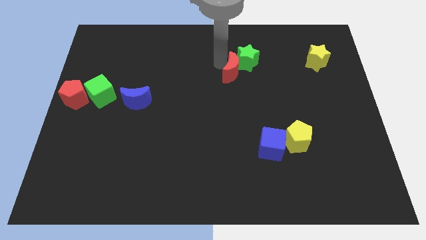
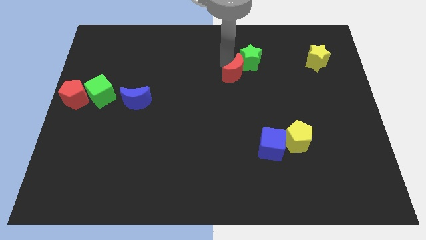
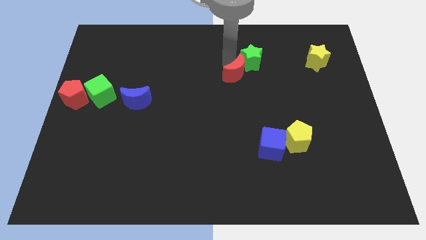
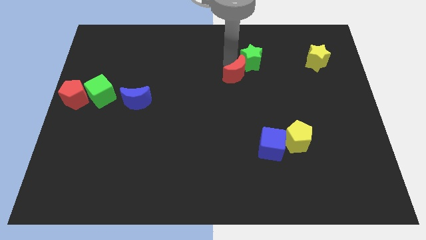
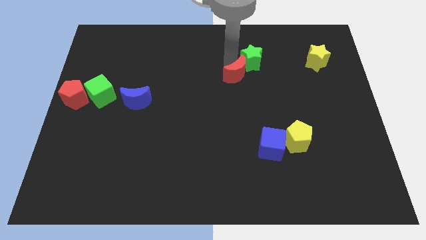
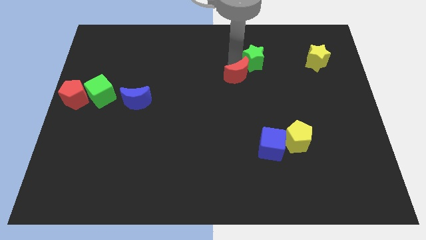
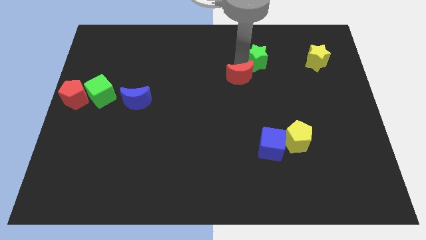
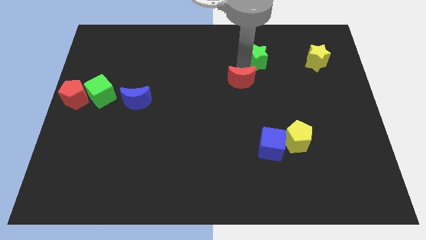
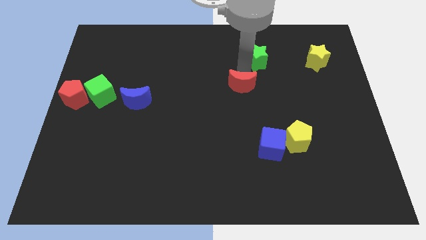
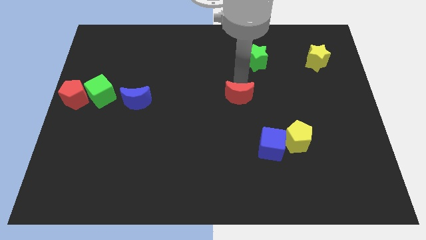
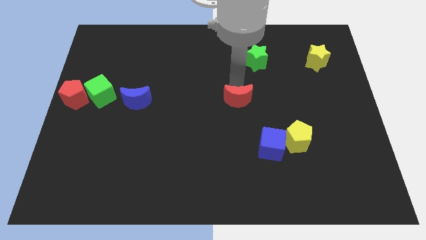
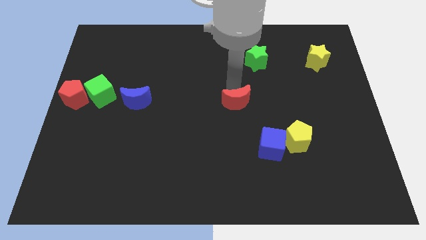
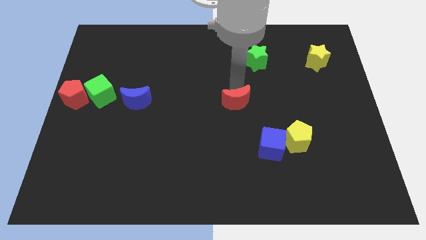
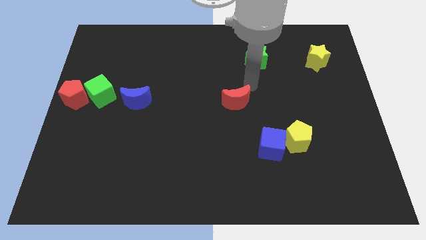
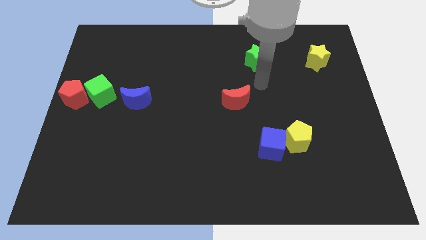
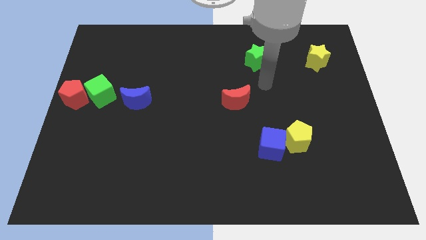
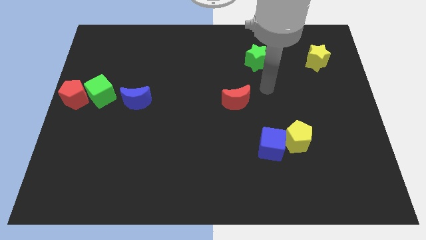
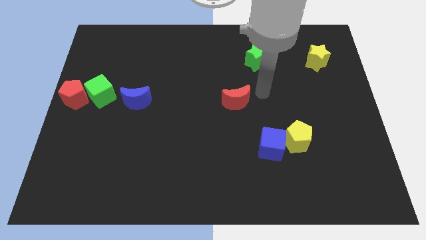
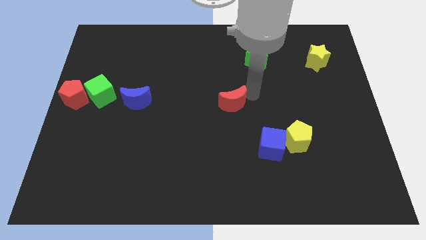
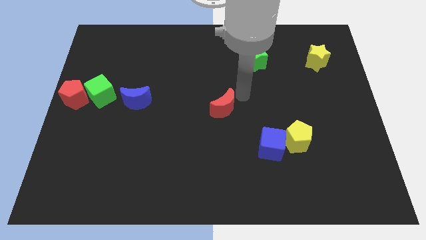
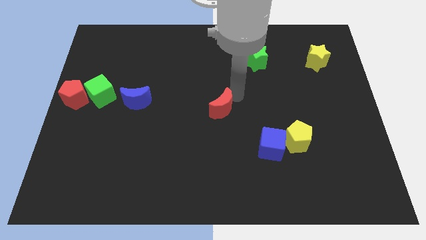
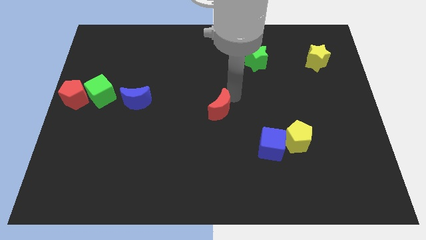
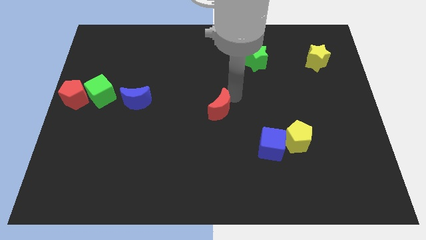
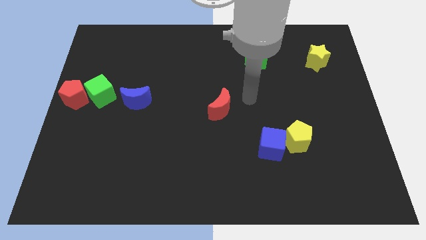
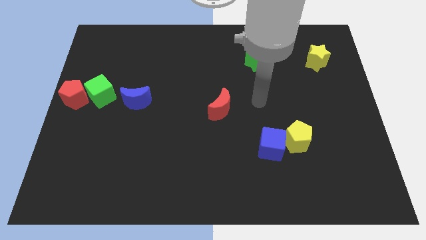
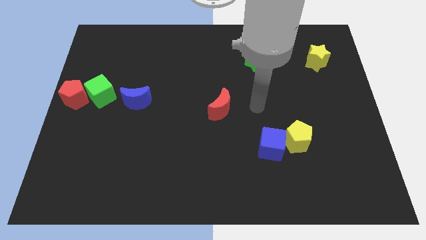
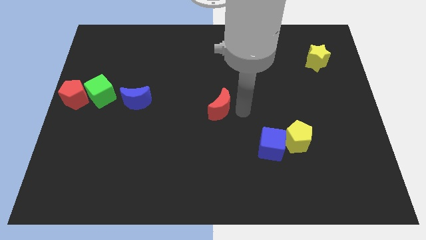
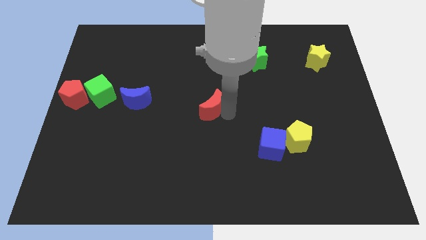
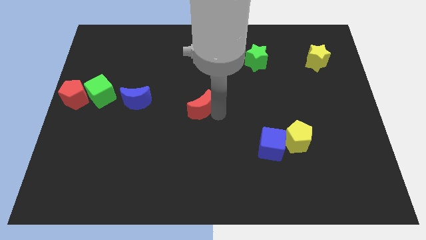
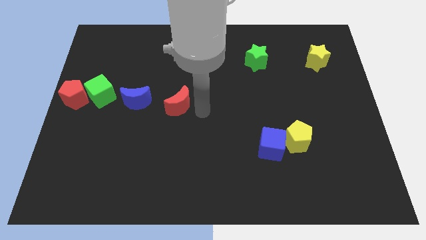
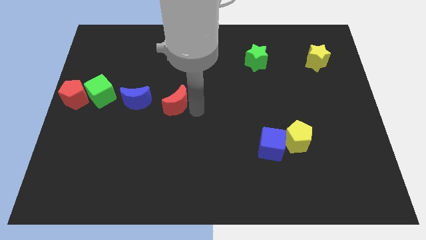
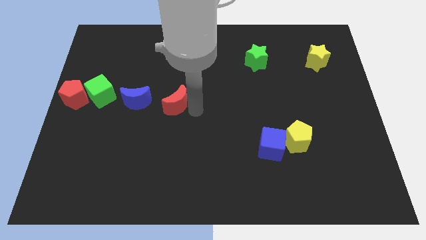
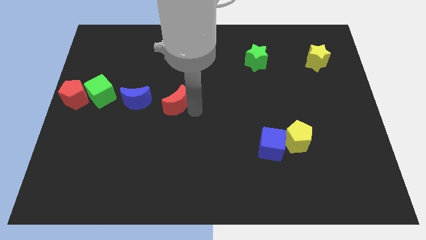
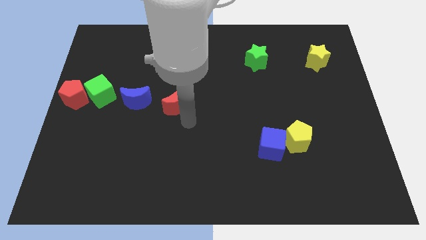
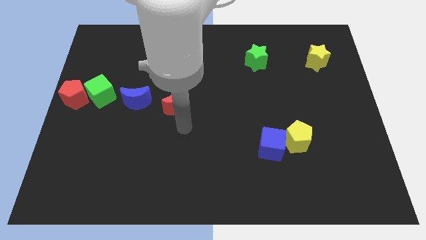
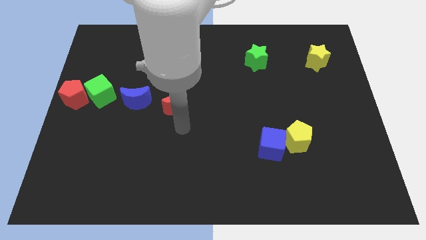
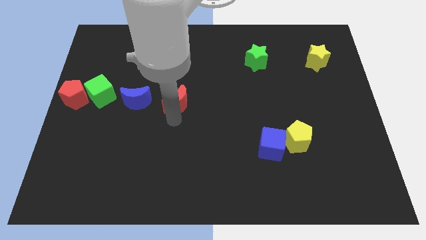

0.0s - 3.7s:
separate the red pentagon away from the green star

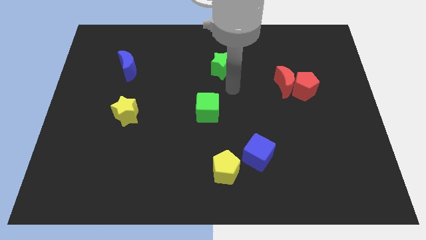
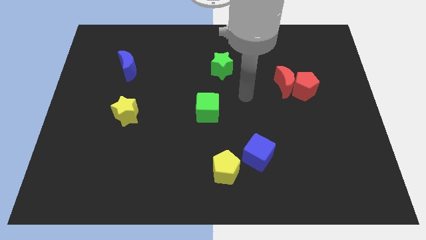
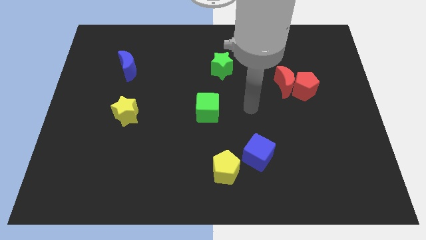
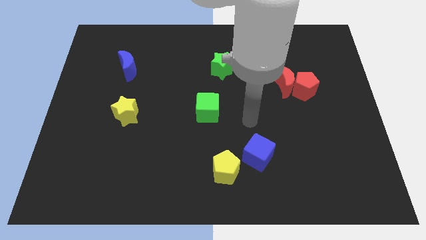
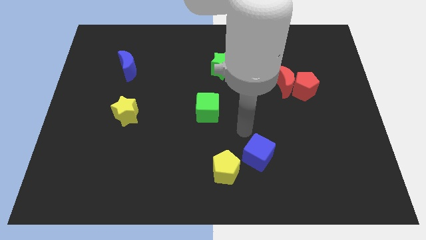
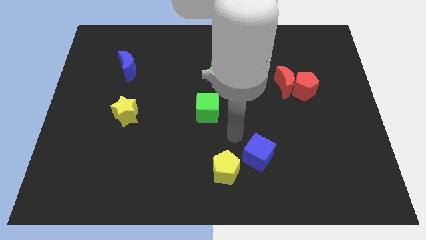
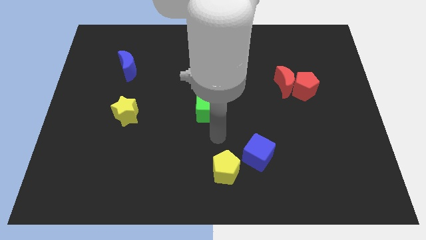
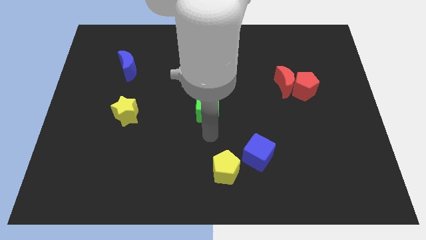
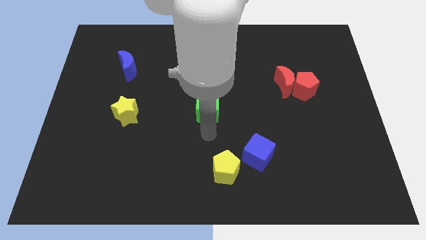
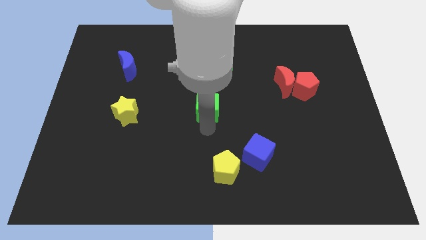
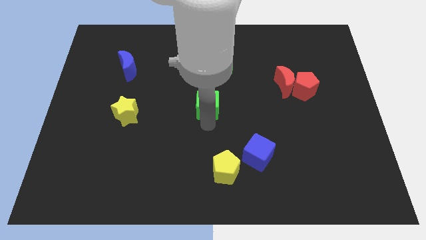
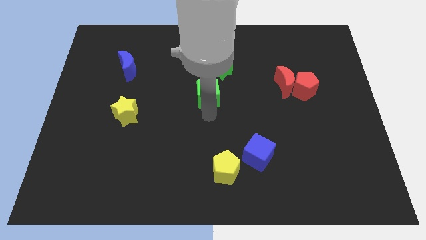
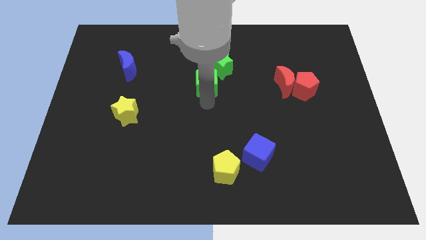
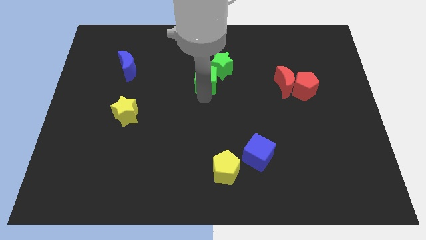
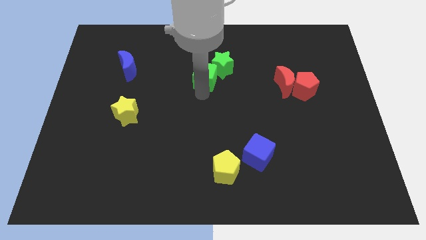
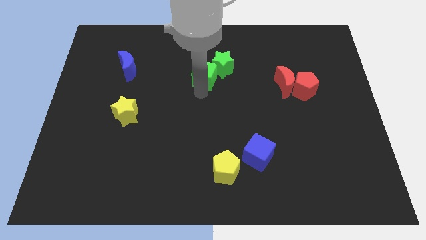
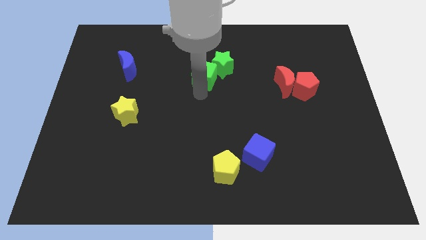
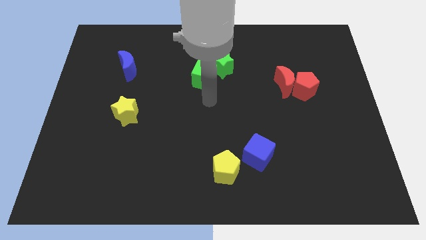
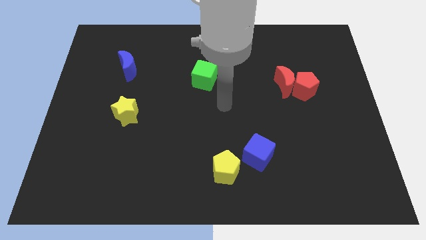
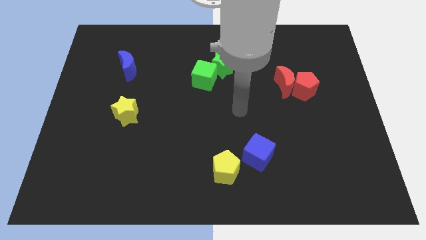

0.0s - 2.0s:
move the green cube into the green star

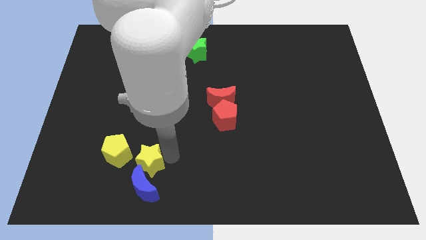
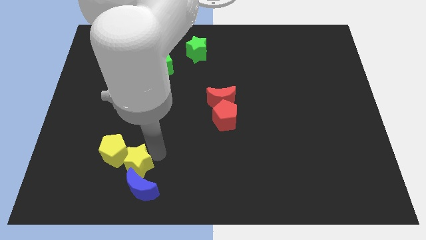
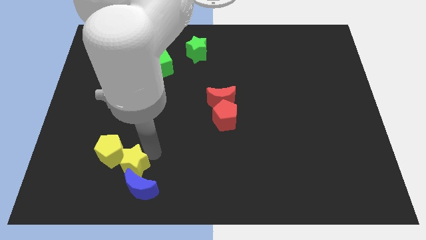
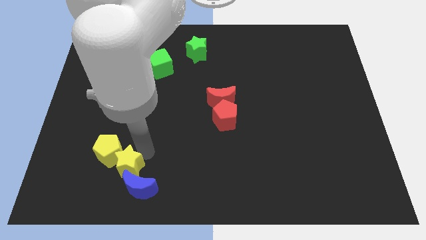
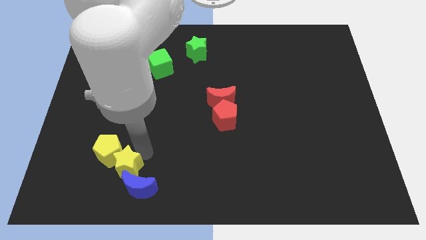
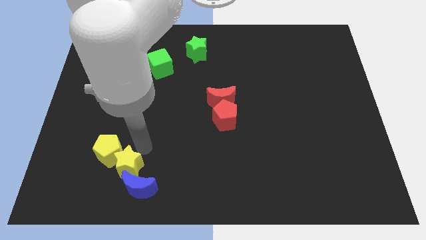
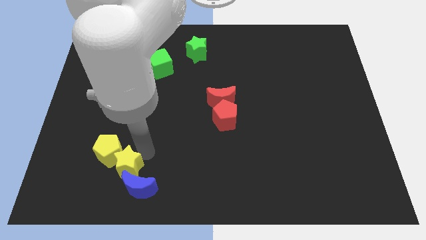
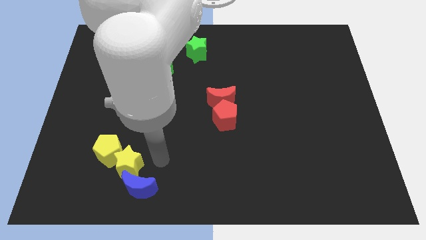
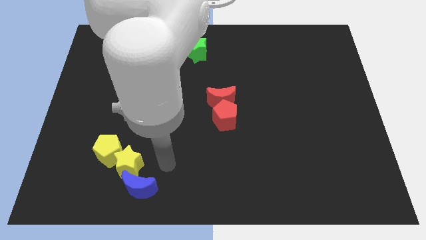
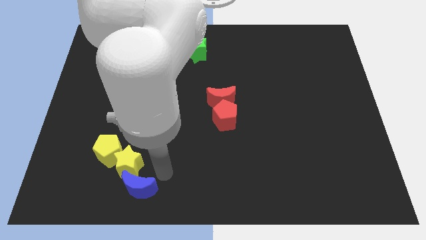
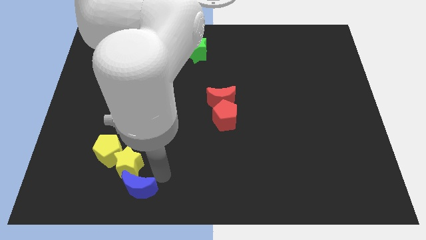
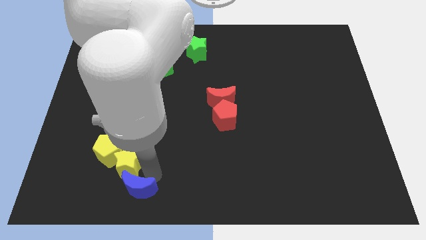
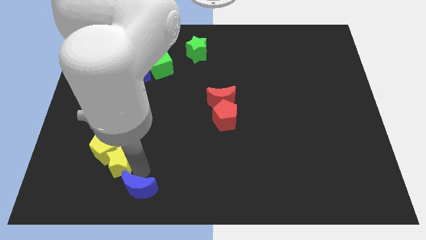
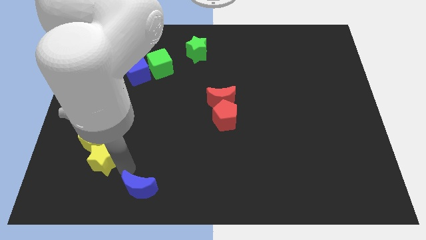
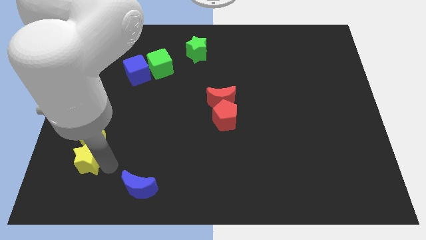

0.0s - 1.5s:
separate the blue moon and yellow star

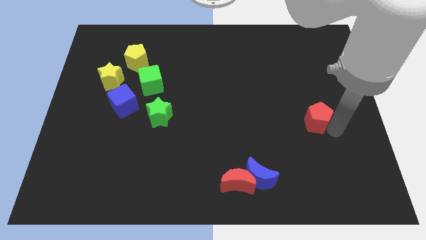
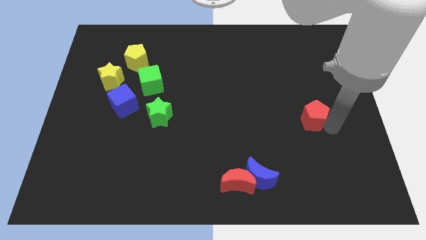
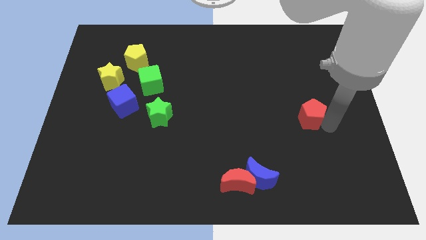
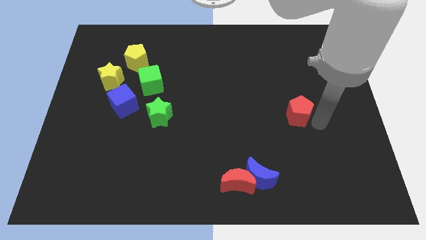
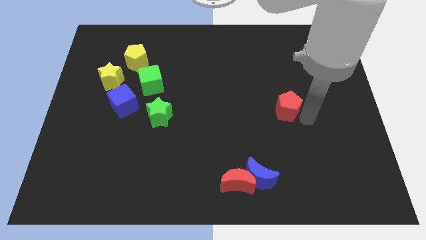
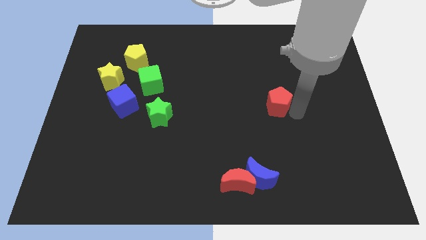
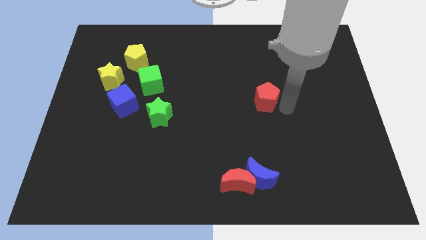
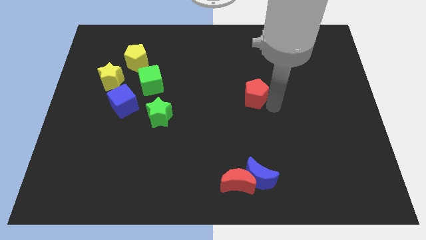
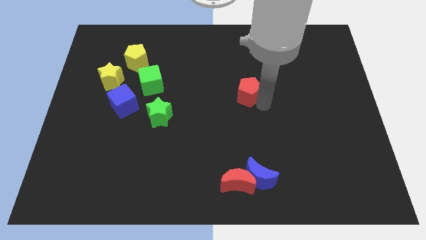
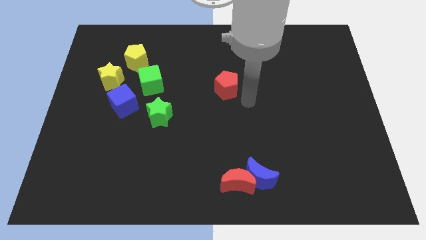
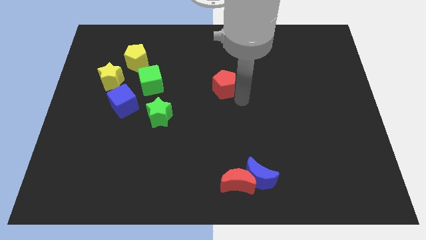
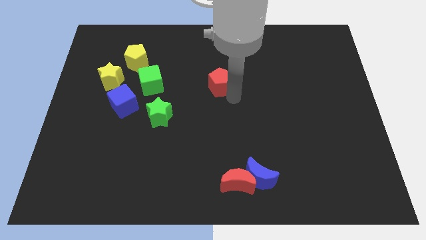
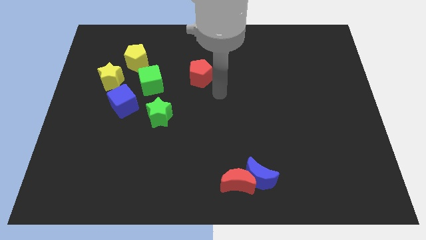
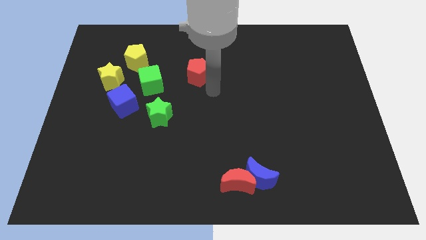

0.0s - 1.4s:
push the red pentagon towards the left side of the board

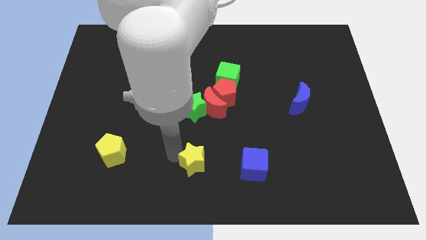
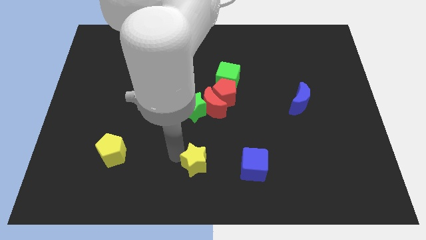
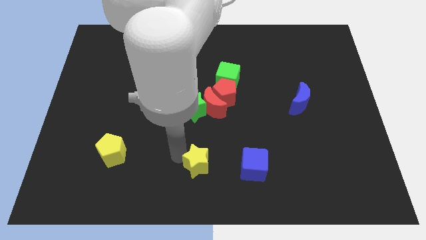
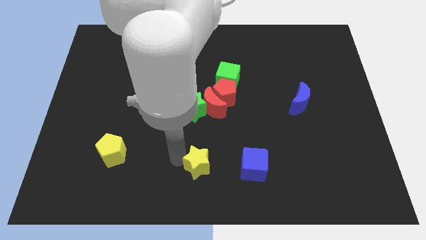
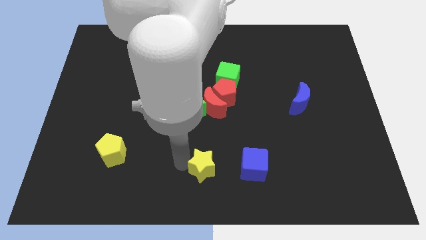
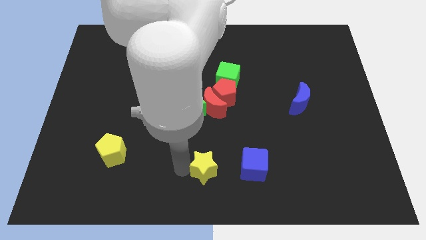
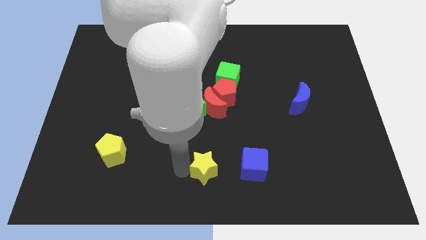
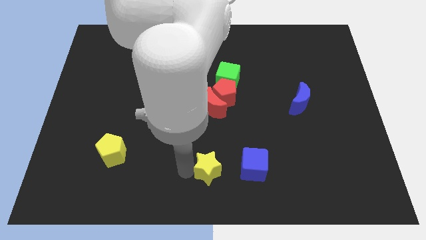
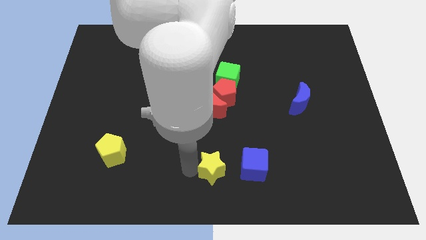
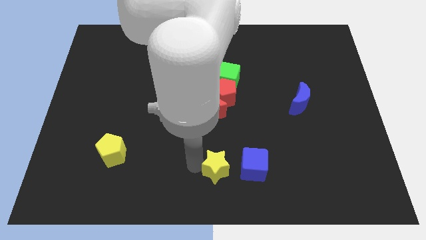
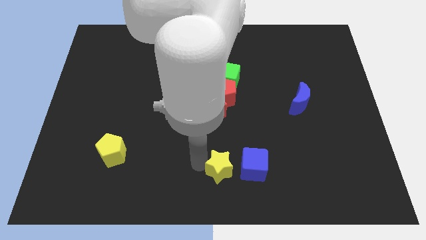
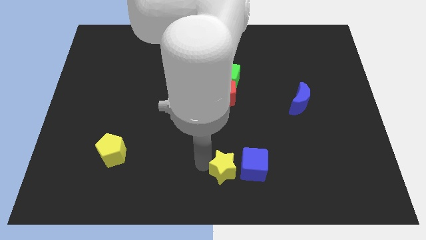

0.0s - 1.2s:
place yellow star below red crescent
